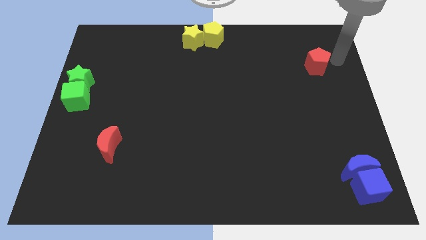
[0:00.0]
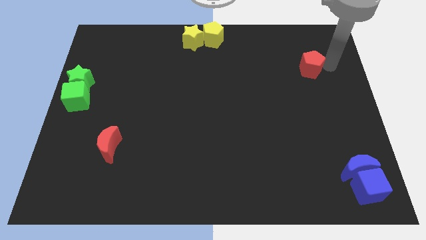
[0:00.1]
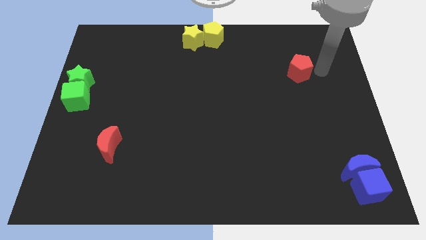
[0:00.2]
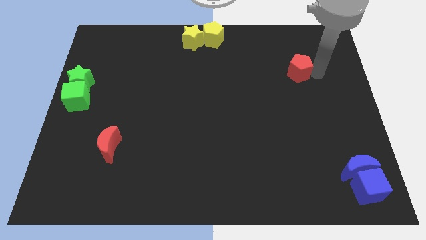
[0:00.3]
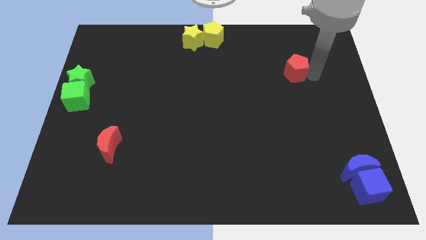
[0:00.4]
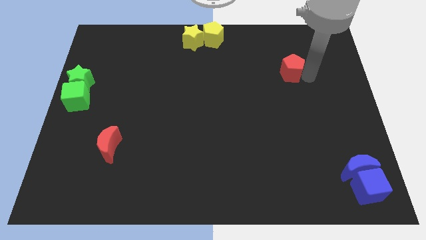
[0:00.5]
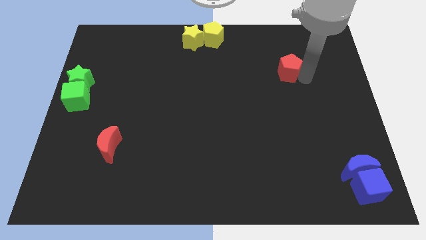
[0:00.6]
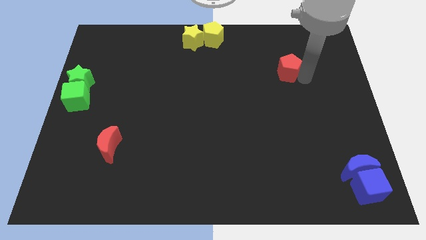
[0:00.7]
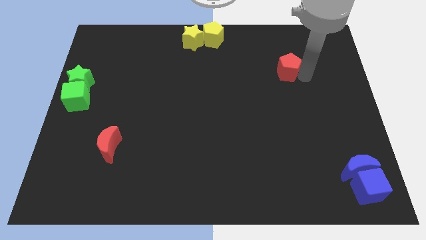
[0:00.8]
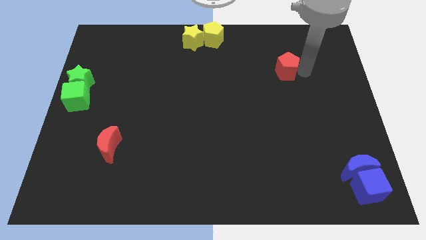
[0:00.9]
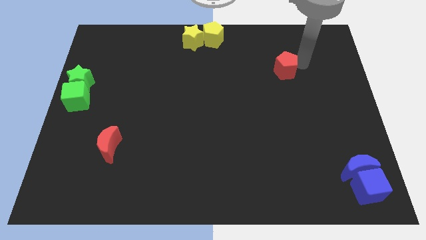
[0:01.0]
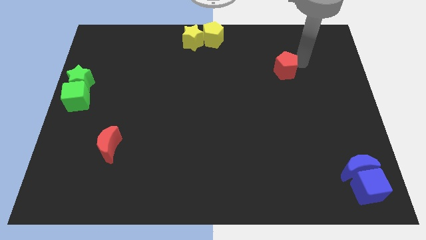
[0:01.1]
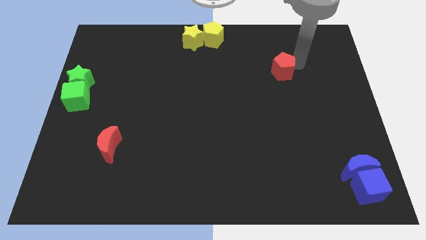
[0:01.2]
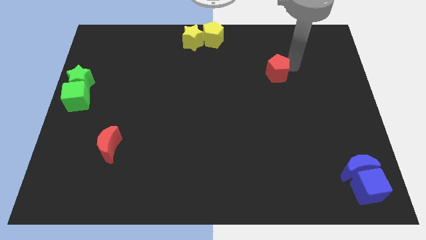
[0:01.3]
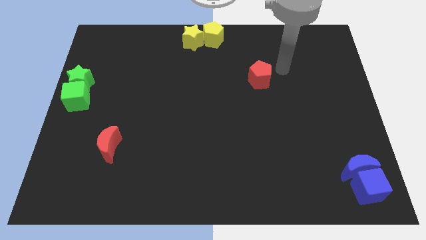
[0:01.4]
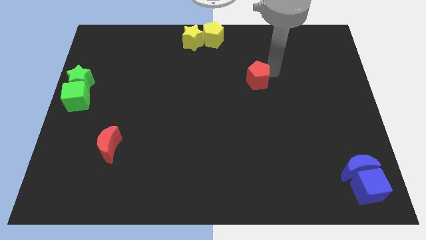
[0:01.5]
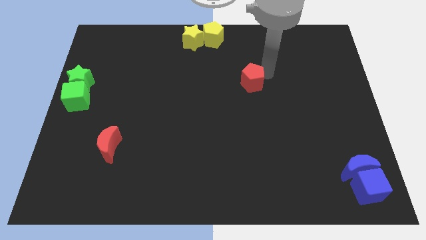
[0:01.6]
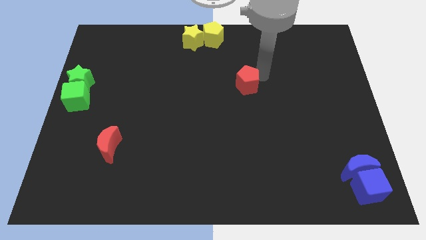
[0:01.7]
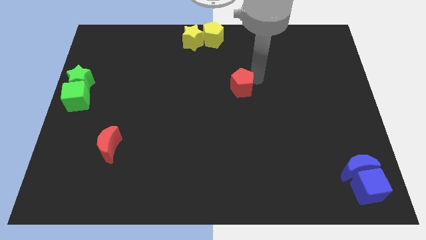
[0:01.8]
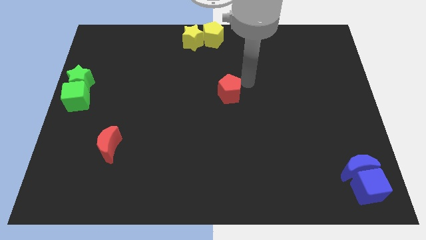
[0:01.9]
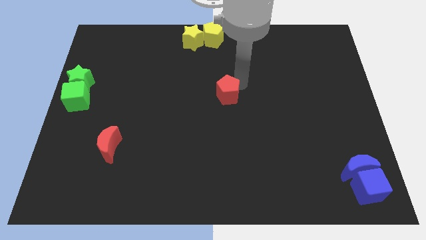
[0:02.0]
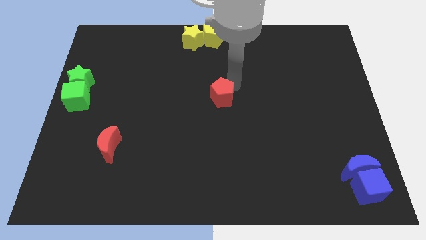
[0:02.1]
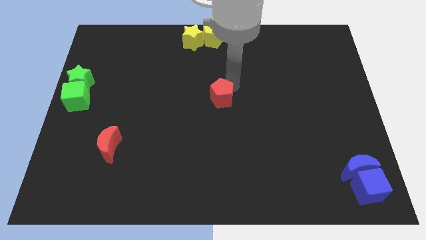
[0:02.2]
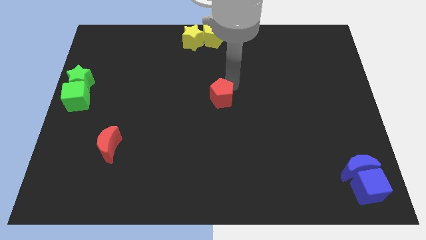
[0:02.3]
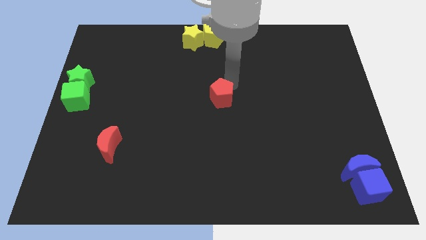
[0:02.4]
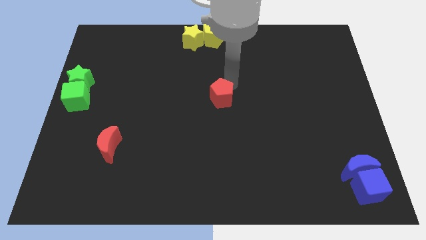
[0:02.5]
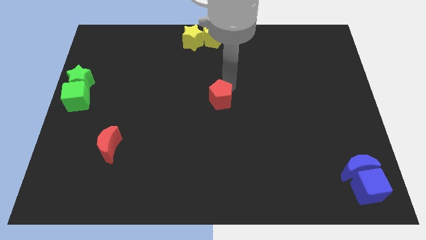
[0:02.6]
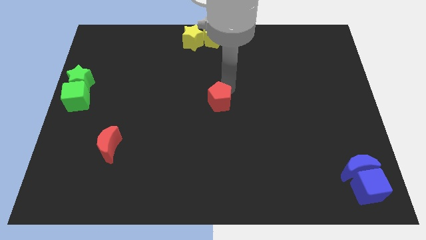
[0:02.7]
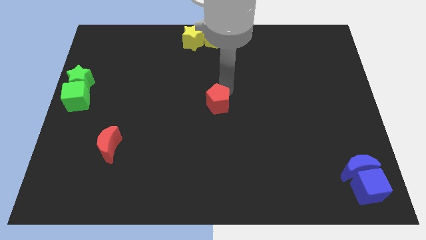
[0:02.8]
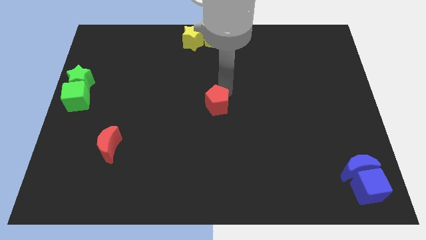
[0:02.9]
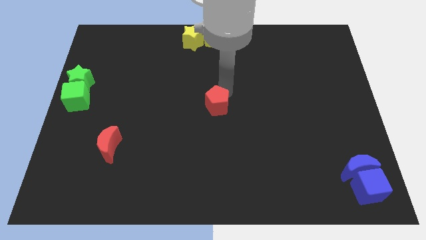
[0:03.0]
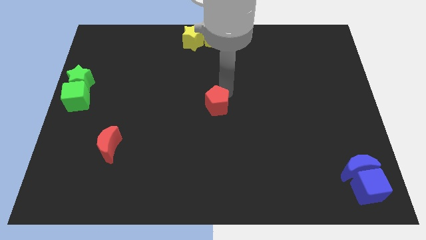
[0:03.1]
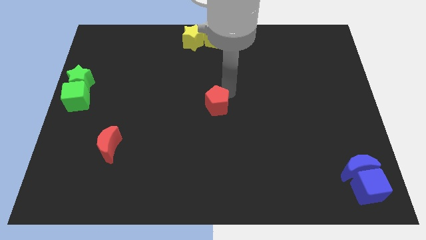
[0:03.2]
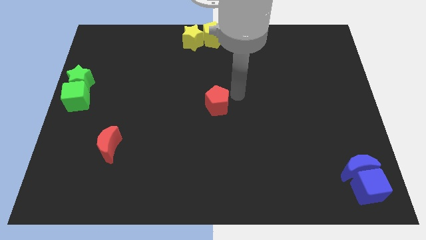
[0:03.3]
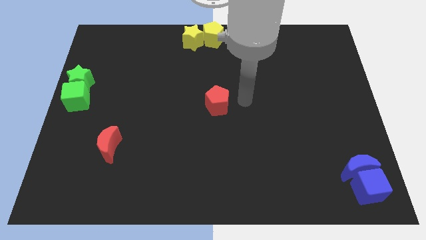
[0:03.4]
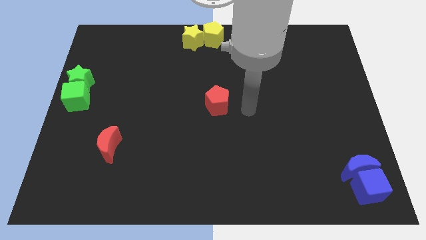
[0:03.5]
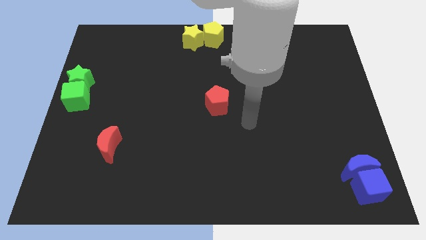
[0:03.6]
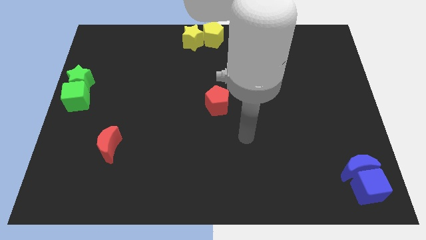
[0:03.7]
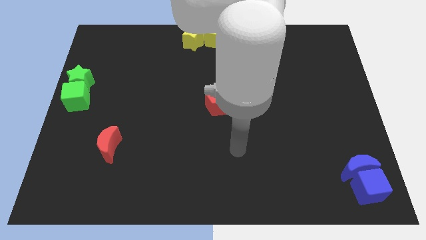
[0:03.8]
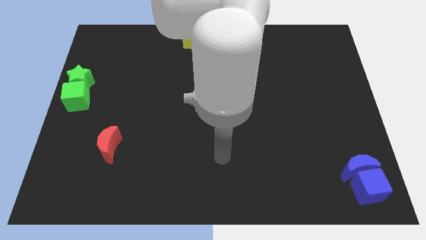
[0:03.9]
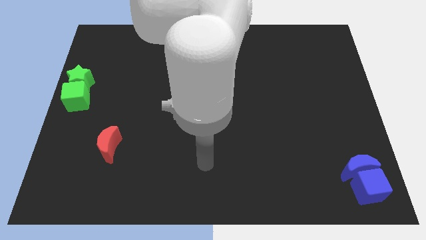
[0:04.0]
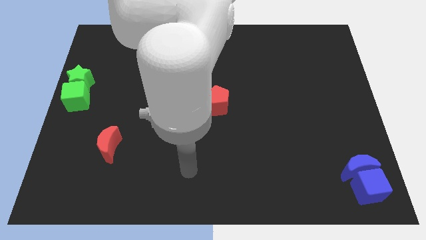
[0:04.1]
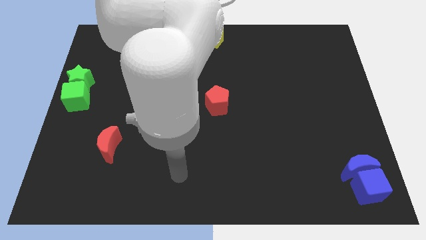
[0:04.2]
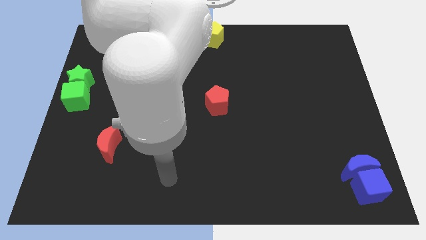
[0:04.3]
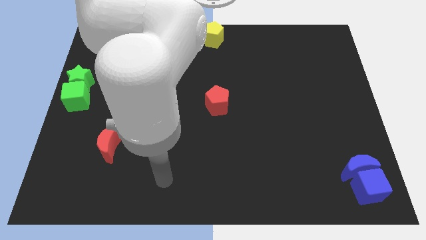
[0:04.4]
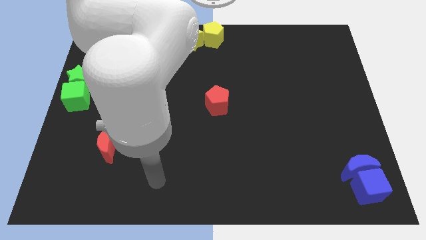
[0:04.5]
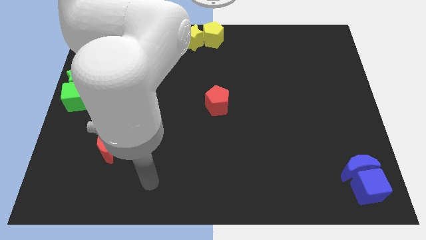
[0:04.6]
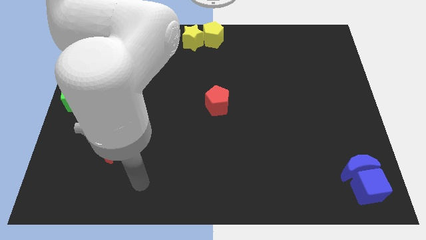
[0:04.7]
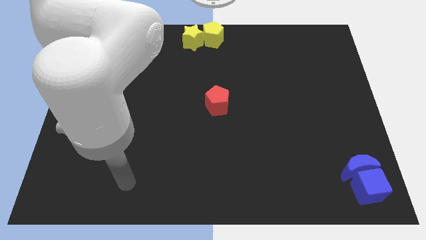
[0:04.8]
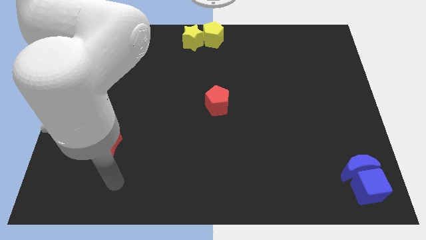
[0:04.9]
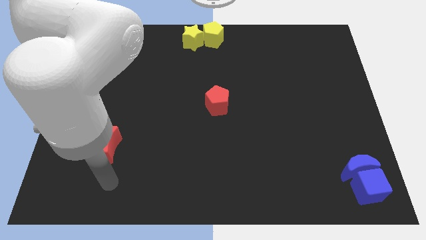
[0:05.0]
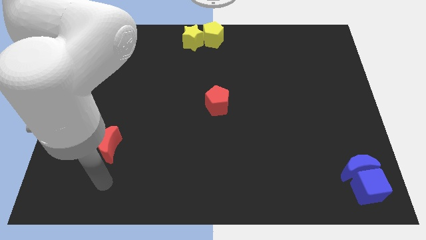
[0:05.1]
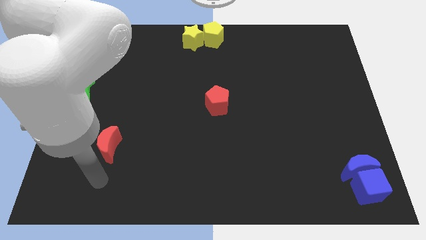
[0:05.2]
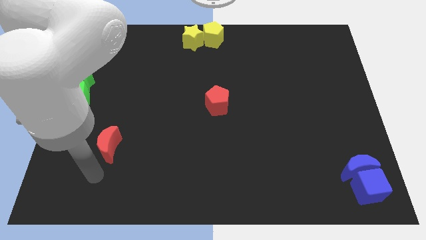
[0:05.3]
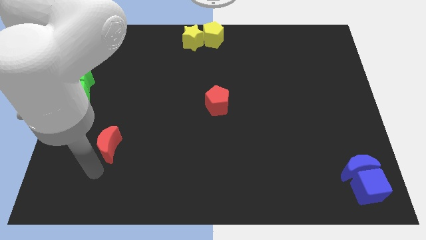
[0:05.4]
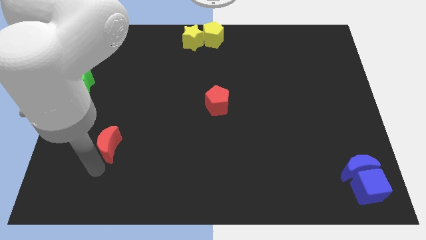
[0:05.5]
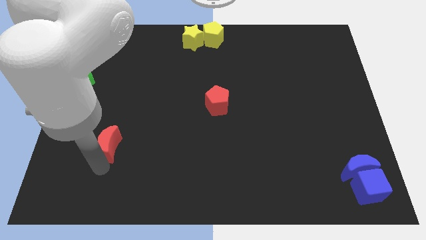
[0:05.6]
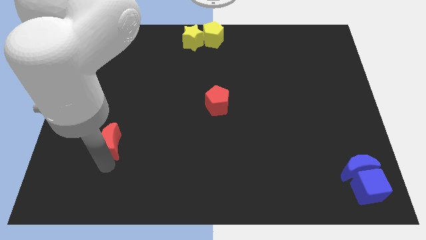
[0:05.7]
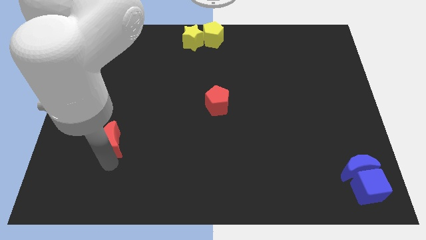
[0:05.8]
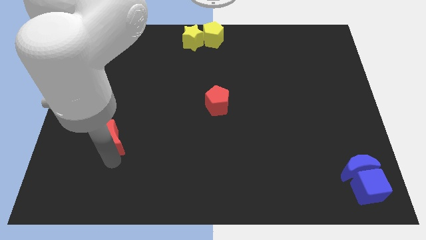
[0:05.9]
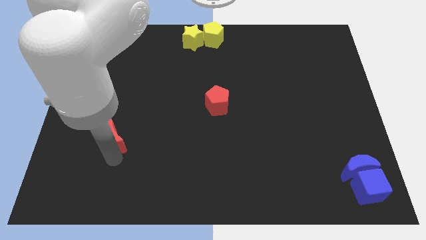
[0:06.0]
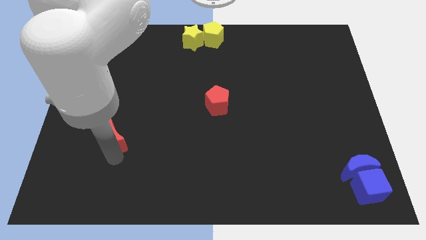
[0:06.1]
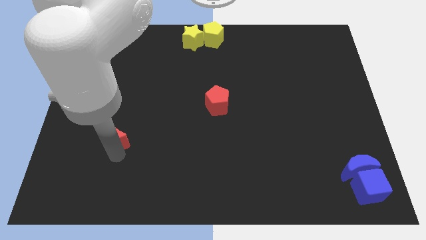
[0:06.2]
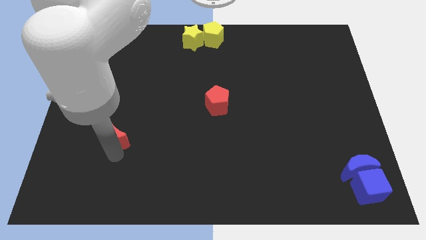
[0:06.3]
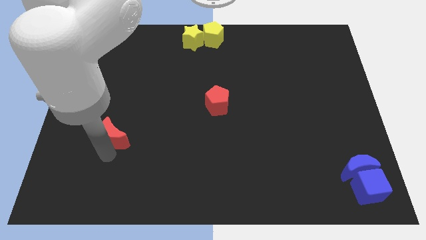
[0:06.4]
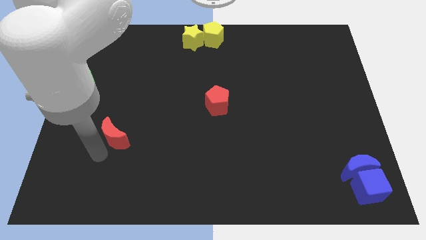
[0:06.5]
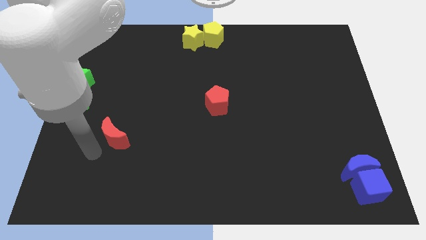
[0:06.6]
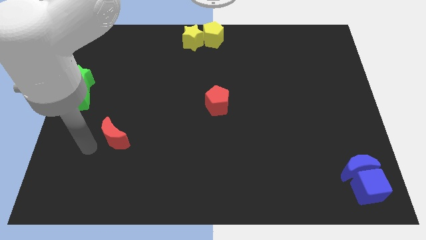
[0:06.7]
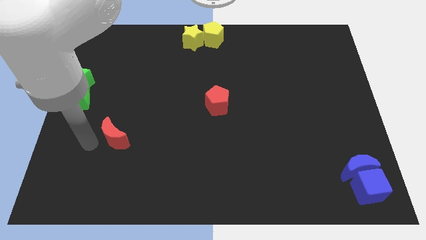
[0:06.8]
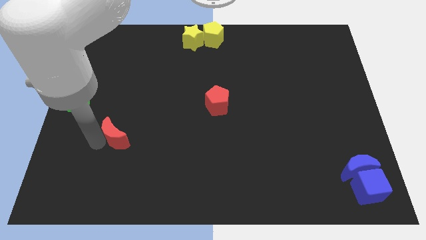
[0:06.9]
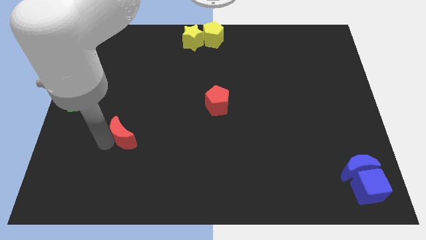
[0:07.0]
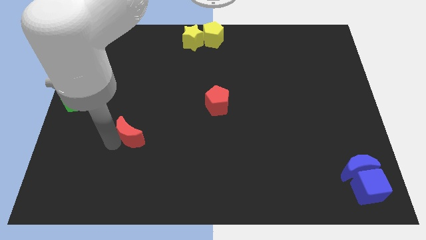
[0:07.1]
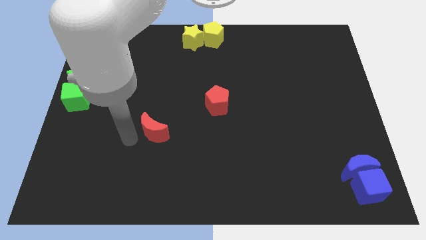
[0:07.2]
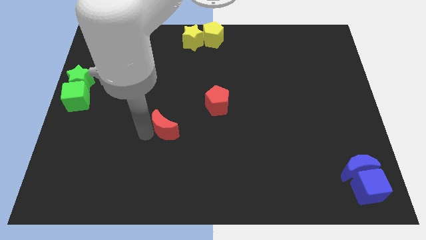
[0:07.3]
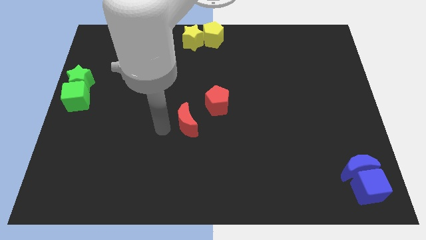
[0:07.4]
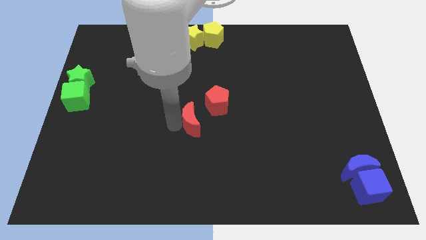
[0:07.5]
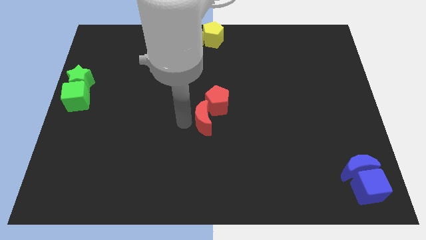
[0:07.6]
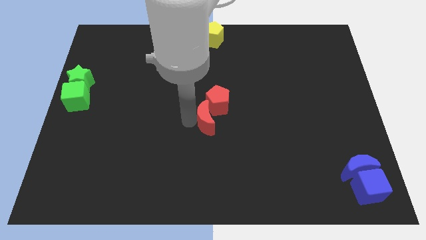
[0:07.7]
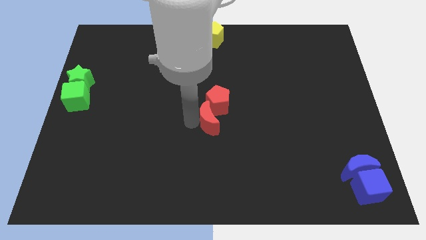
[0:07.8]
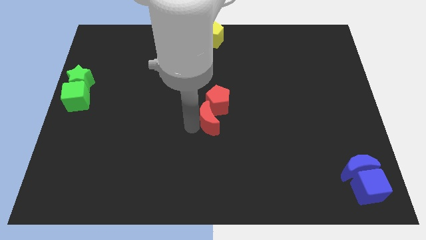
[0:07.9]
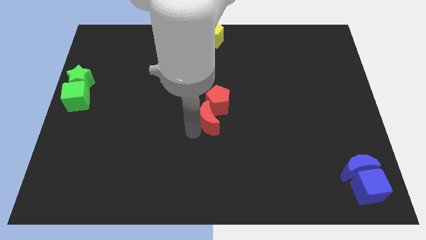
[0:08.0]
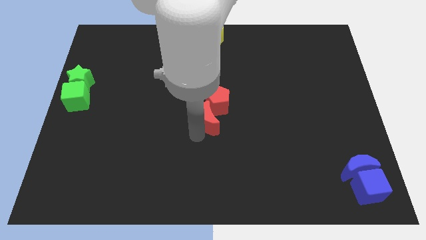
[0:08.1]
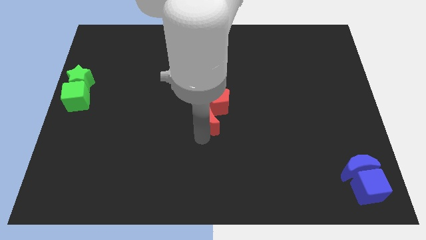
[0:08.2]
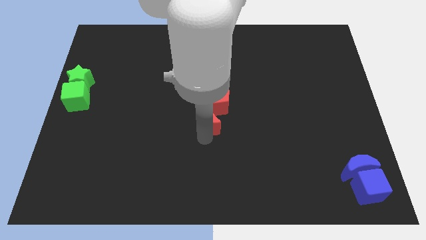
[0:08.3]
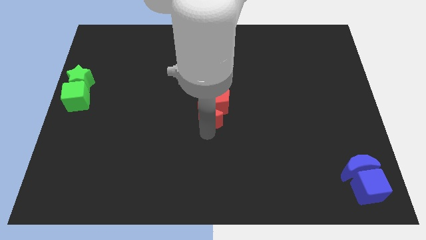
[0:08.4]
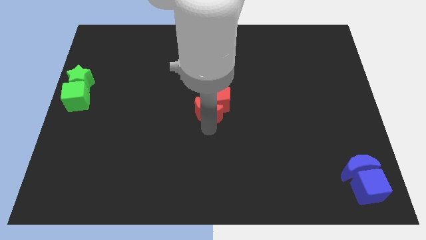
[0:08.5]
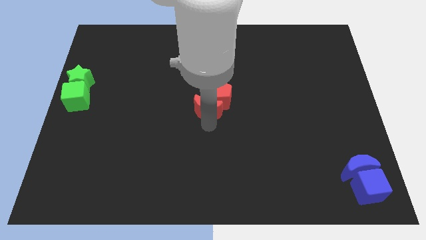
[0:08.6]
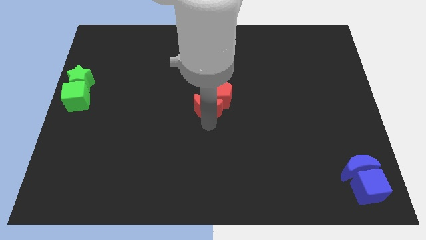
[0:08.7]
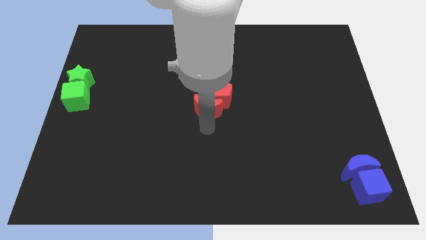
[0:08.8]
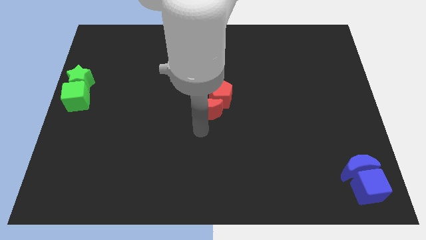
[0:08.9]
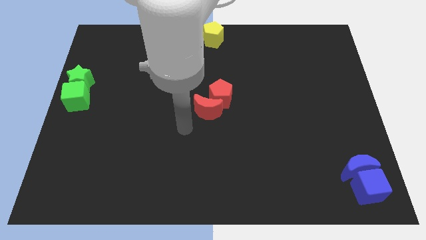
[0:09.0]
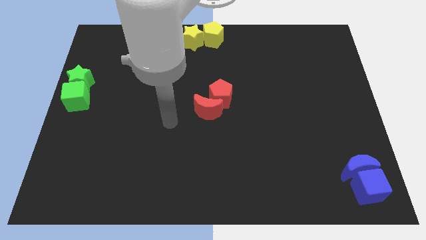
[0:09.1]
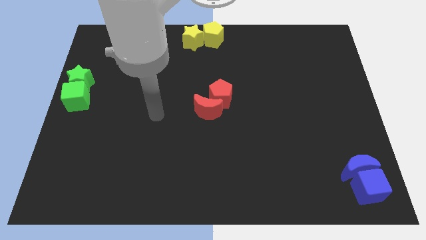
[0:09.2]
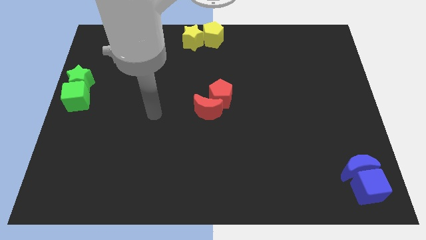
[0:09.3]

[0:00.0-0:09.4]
move the red pentagon and the red crescent to the center of the board
